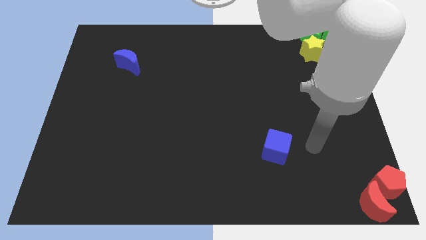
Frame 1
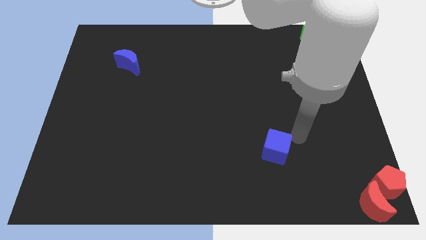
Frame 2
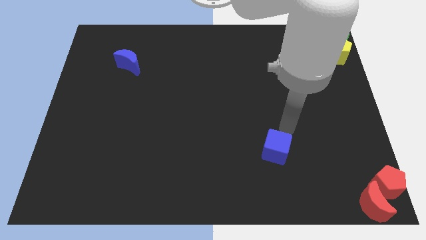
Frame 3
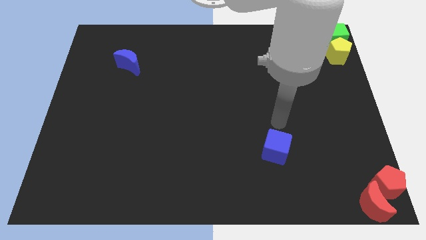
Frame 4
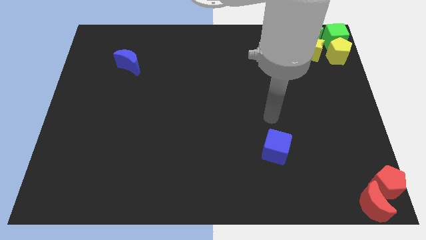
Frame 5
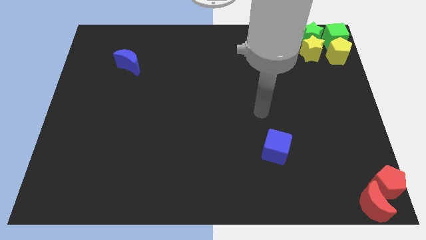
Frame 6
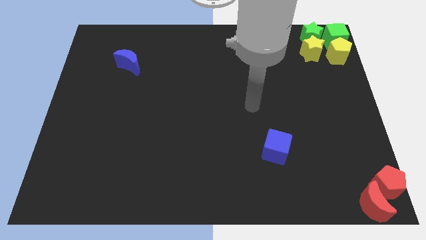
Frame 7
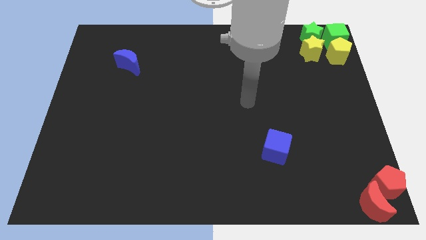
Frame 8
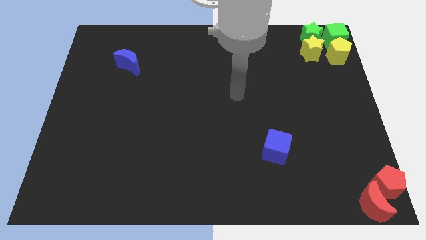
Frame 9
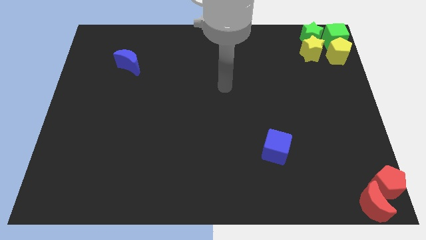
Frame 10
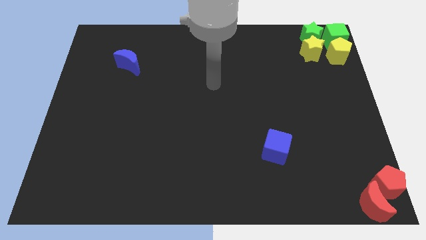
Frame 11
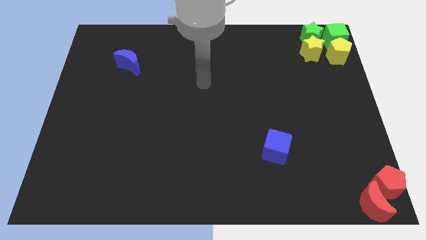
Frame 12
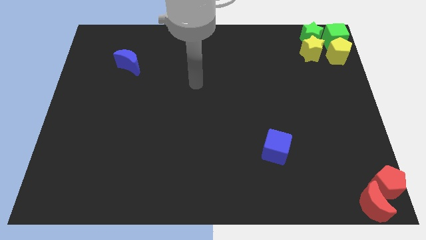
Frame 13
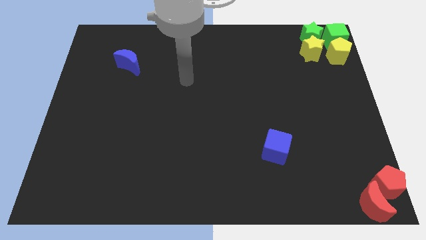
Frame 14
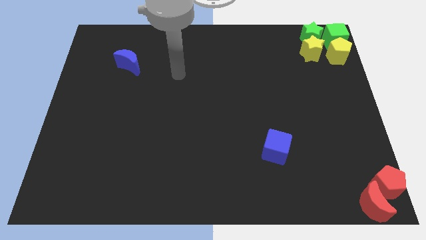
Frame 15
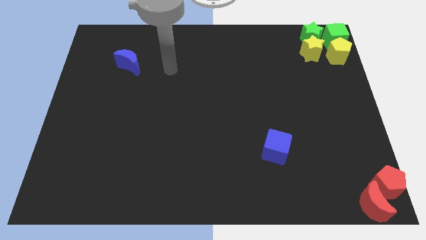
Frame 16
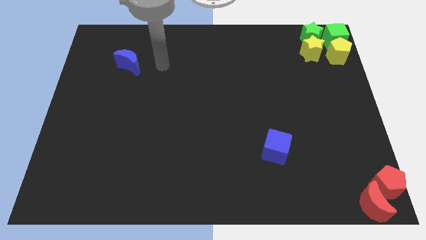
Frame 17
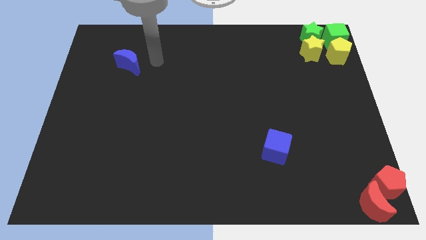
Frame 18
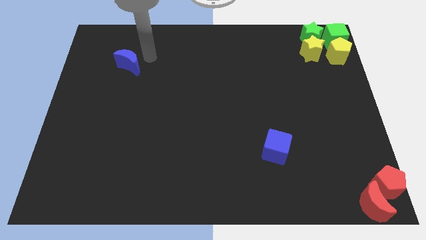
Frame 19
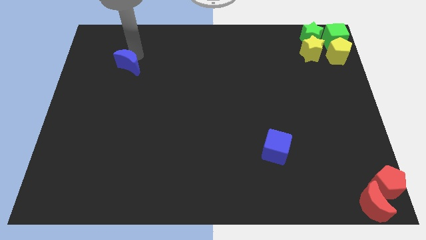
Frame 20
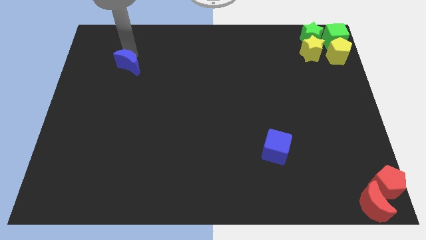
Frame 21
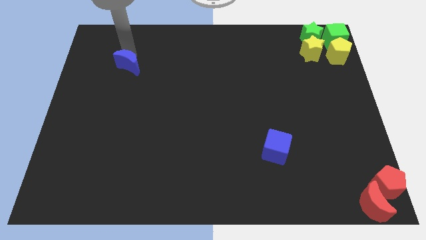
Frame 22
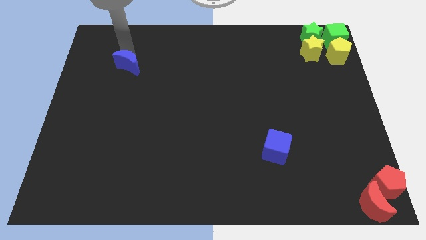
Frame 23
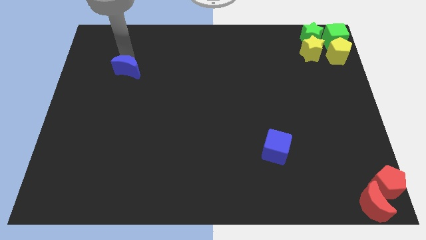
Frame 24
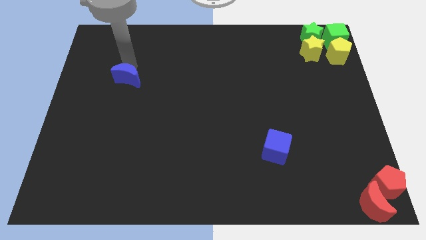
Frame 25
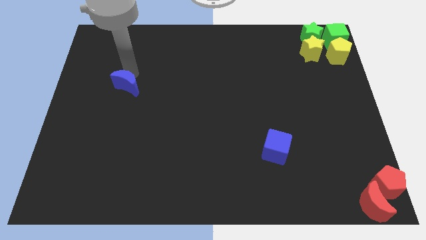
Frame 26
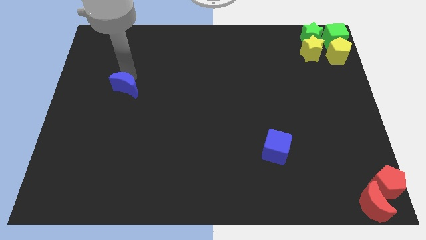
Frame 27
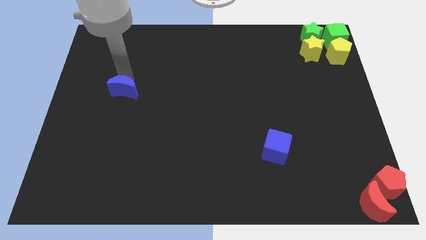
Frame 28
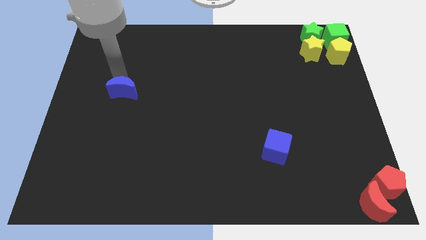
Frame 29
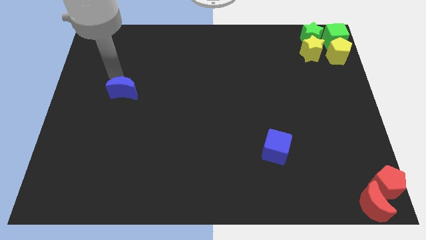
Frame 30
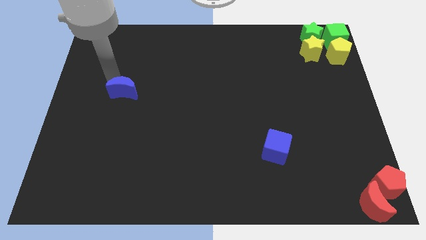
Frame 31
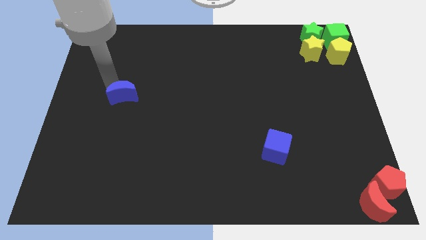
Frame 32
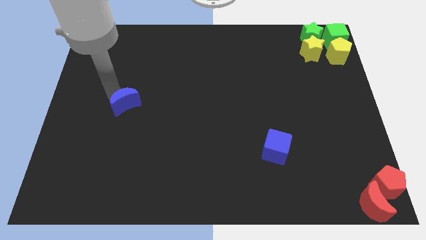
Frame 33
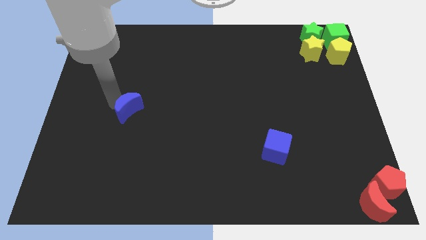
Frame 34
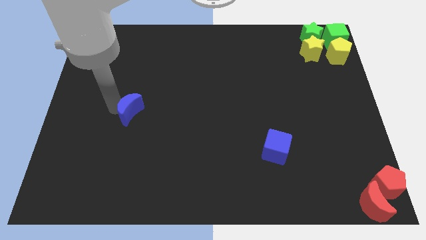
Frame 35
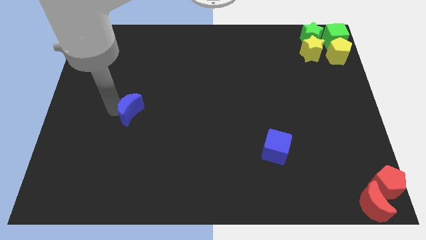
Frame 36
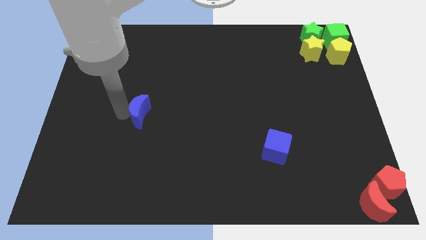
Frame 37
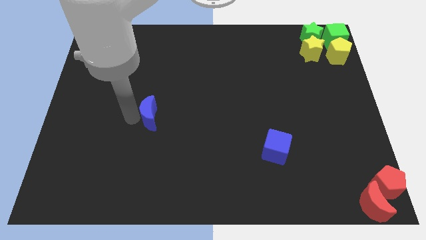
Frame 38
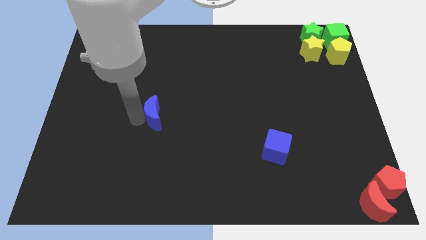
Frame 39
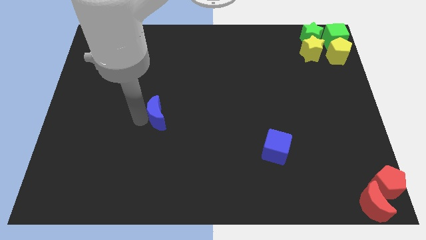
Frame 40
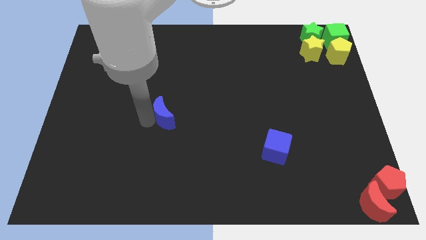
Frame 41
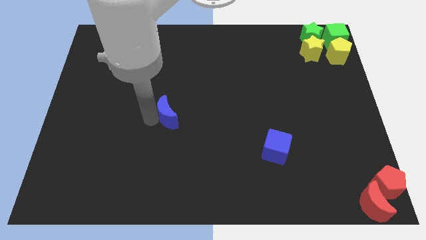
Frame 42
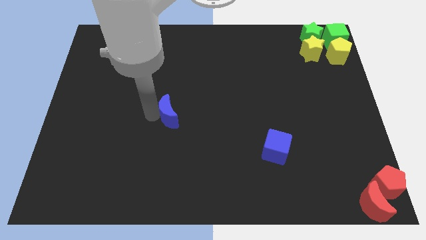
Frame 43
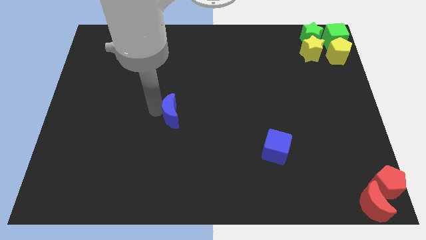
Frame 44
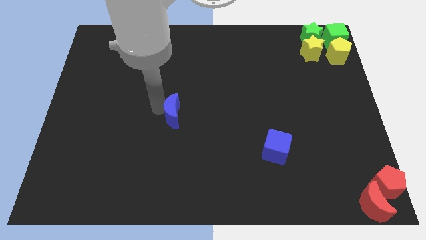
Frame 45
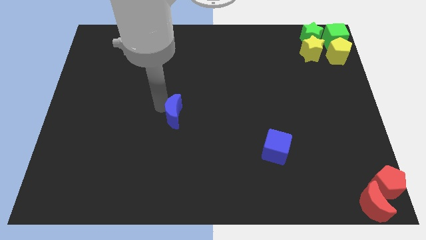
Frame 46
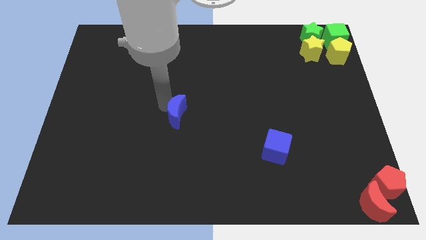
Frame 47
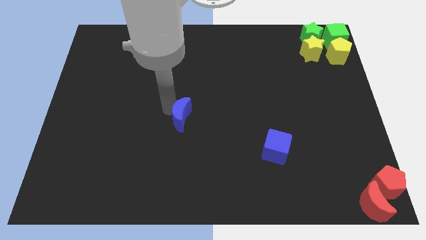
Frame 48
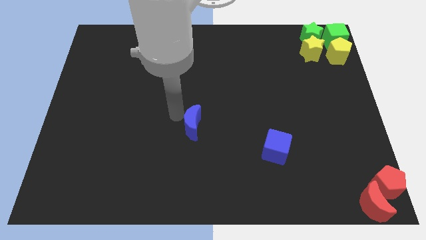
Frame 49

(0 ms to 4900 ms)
move blue crescent to the centre of the board

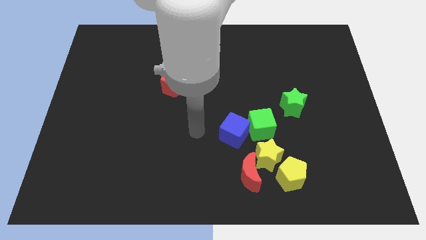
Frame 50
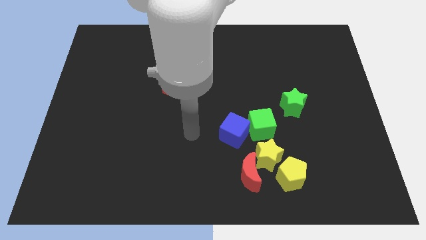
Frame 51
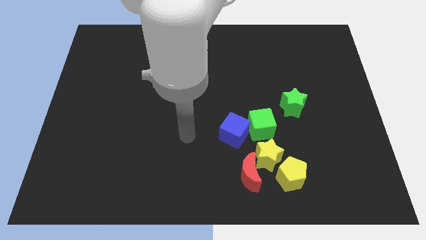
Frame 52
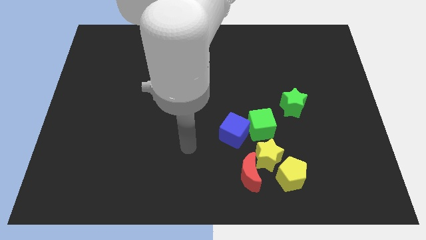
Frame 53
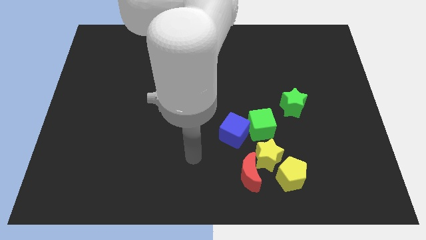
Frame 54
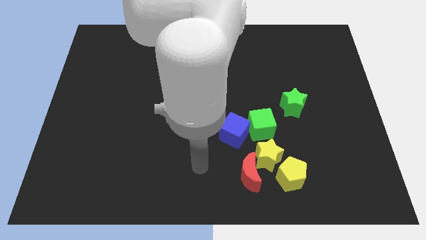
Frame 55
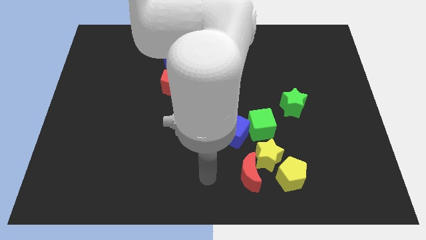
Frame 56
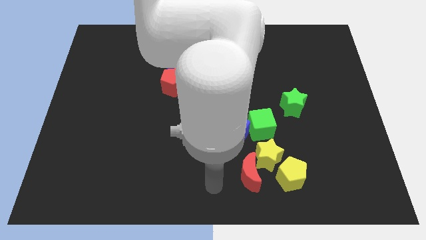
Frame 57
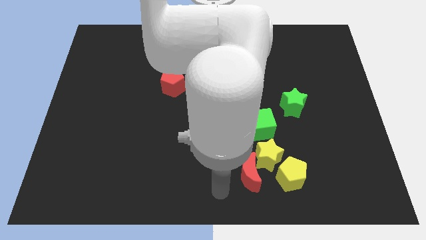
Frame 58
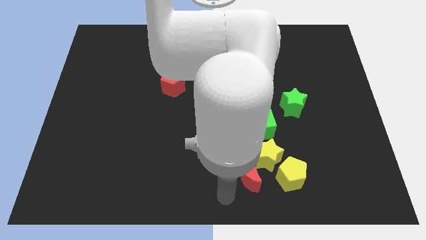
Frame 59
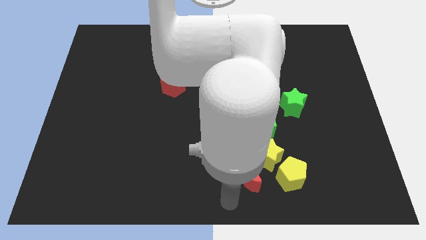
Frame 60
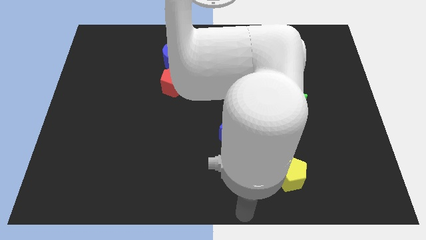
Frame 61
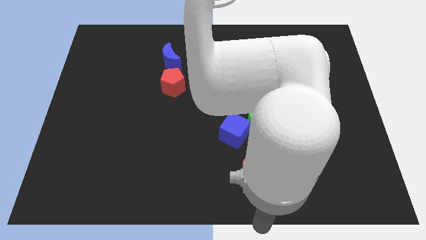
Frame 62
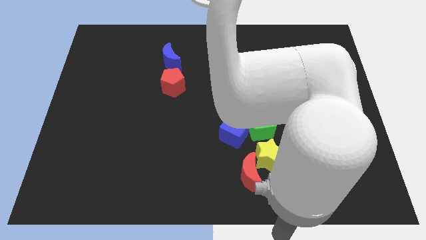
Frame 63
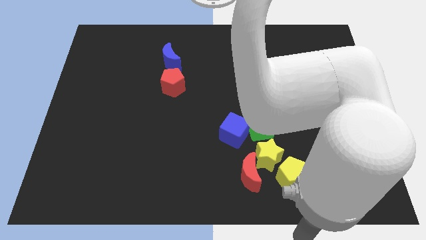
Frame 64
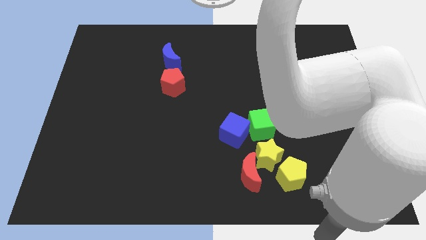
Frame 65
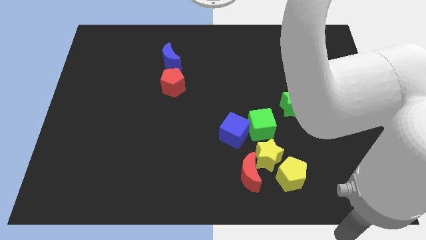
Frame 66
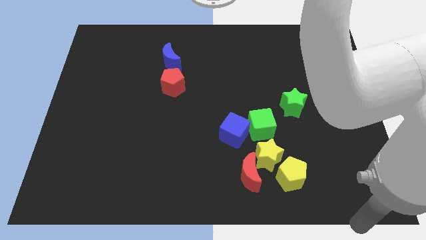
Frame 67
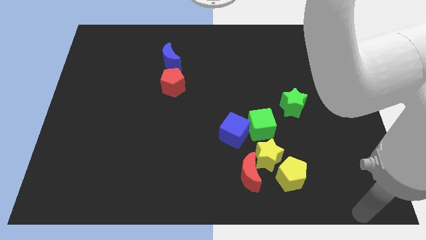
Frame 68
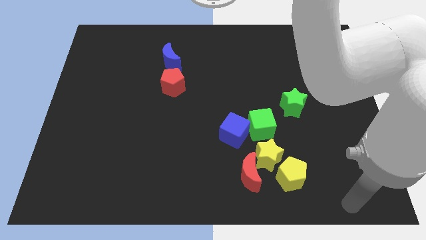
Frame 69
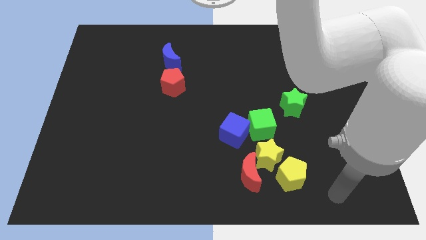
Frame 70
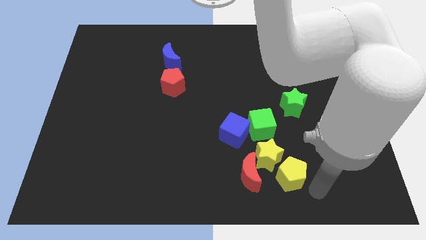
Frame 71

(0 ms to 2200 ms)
point the arm to the bottom right of the yellow pentagon

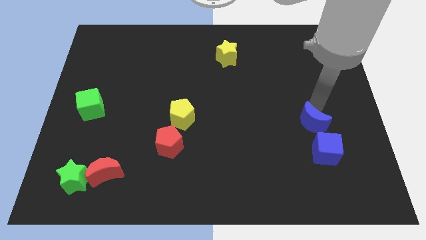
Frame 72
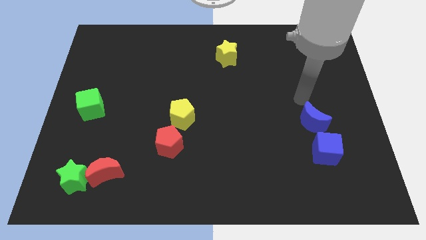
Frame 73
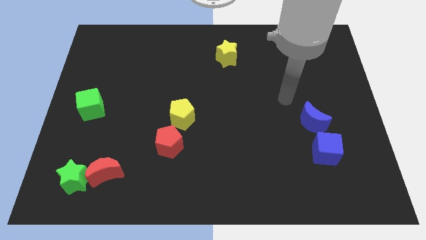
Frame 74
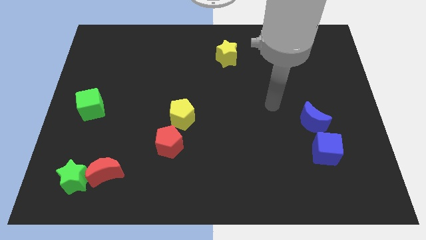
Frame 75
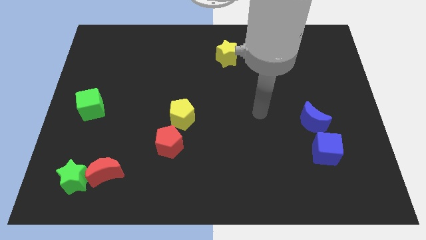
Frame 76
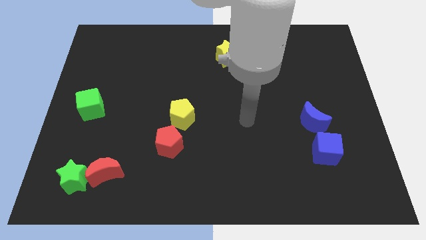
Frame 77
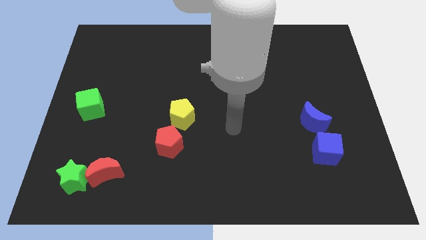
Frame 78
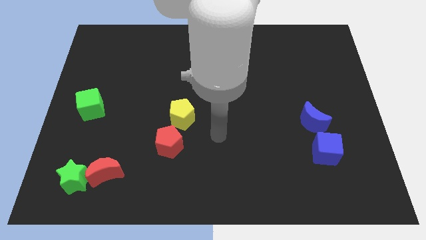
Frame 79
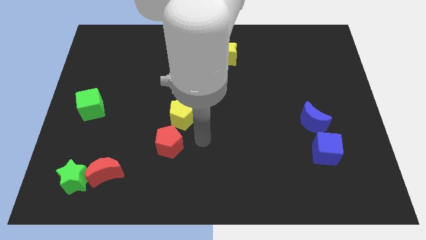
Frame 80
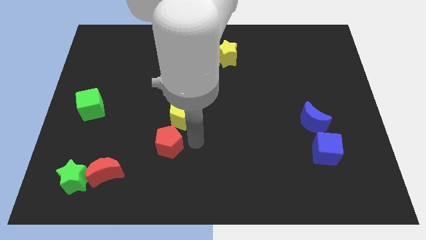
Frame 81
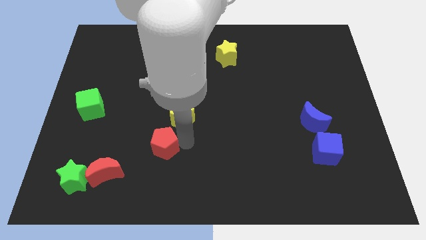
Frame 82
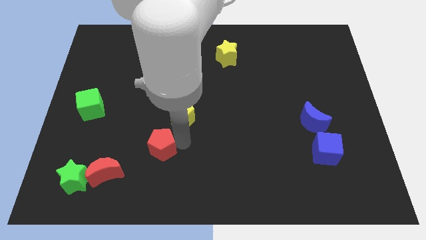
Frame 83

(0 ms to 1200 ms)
move arm to the right of the red pentagon

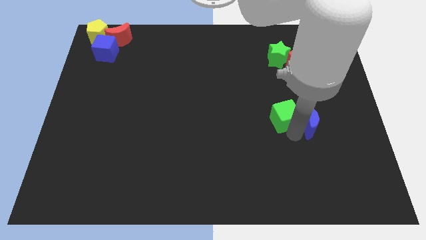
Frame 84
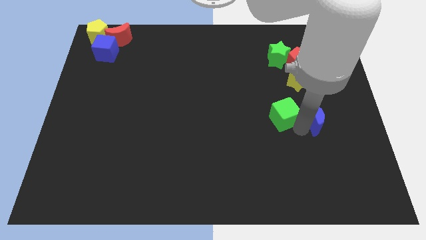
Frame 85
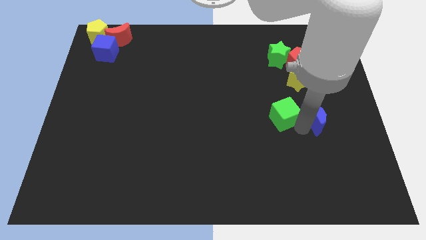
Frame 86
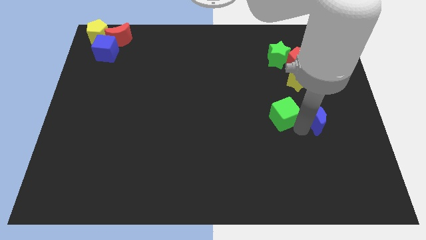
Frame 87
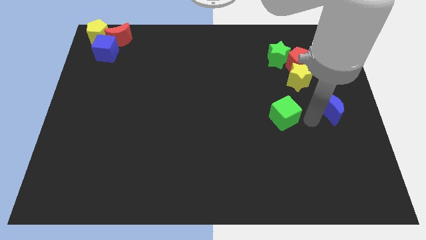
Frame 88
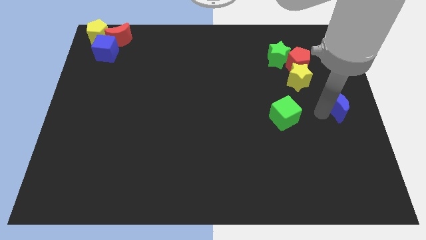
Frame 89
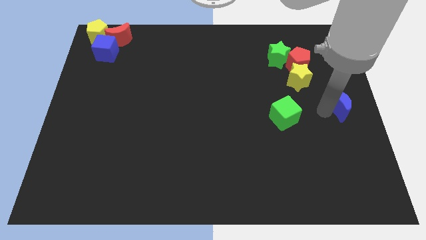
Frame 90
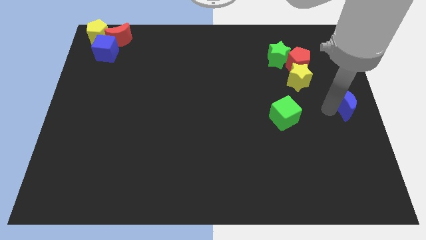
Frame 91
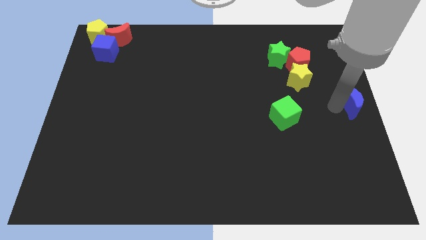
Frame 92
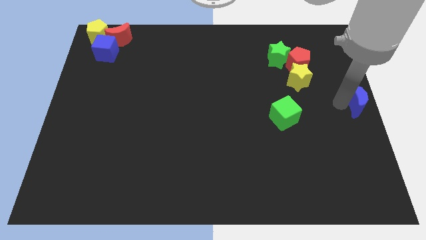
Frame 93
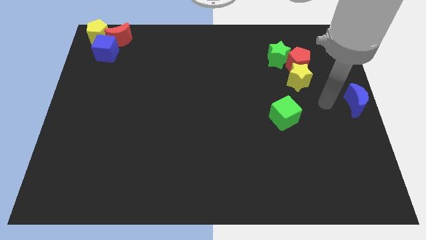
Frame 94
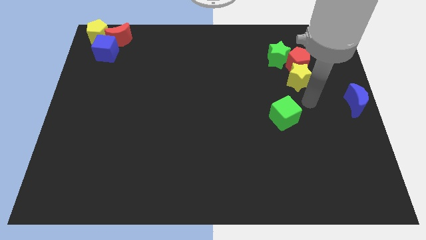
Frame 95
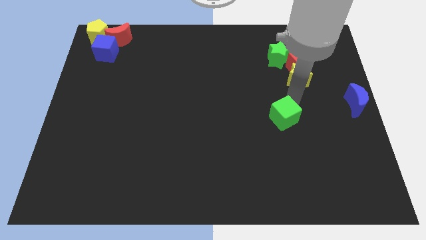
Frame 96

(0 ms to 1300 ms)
move the blue moon to the center right of the board
